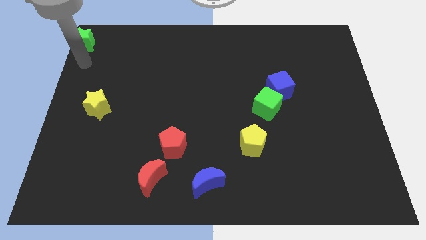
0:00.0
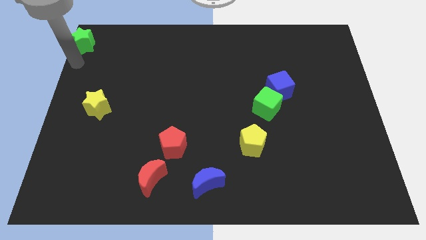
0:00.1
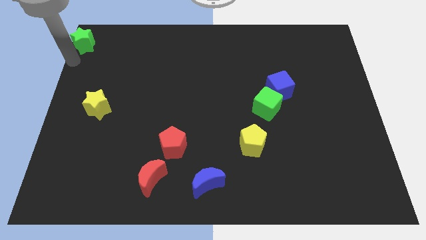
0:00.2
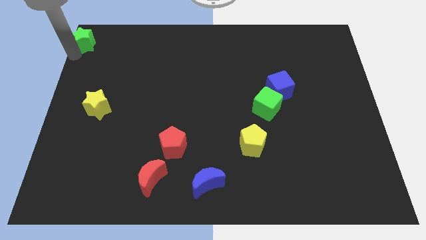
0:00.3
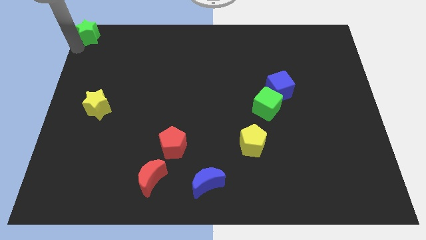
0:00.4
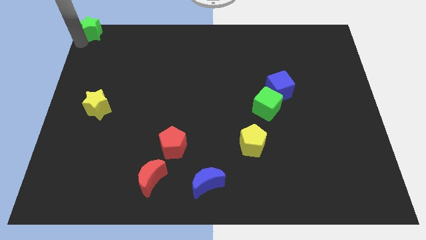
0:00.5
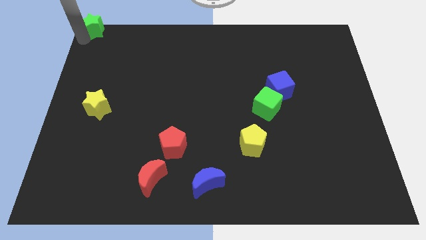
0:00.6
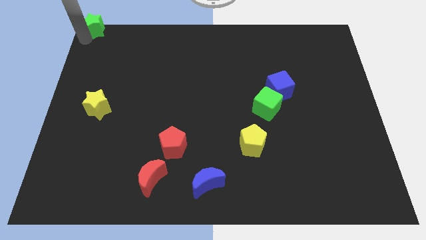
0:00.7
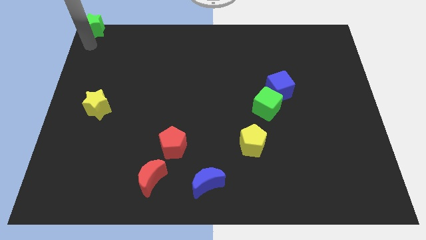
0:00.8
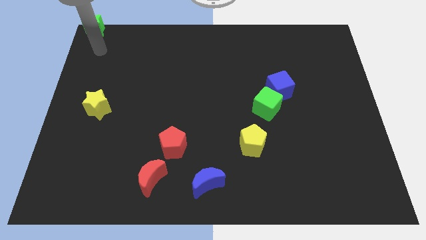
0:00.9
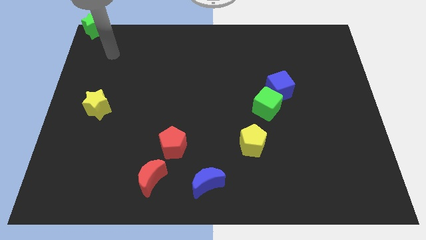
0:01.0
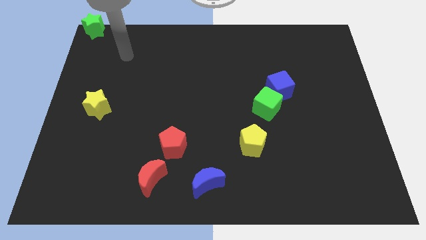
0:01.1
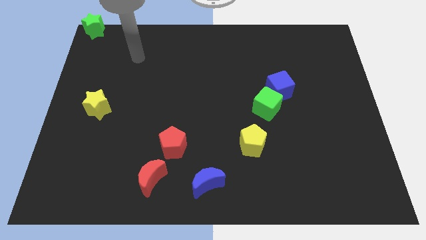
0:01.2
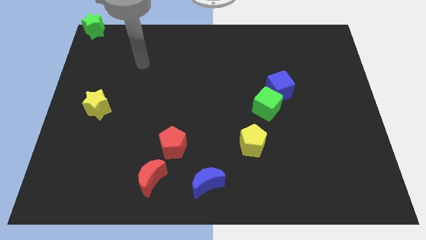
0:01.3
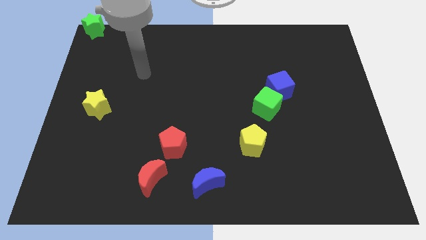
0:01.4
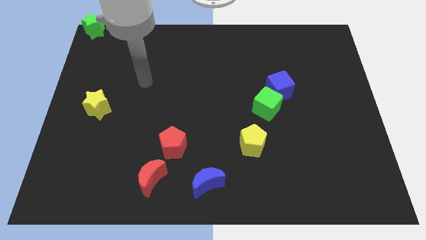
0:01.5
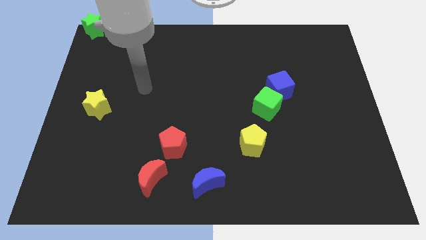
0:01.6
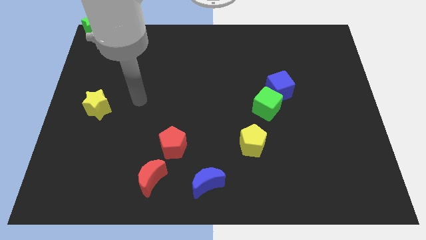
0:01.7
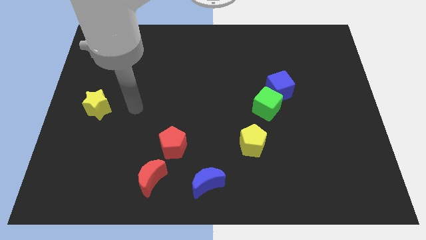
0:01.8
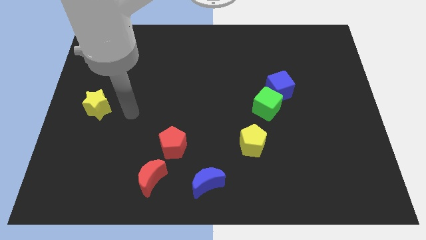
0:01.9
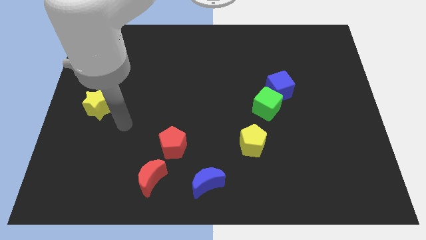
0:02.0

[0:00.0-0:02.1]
push the green star diagonal to yellow star

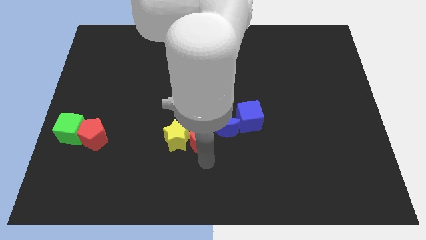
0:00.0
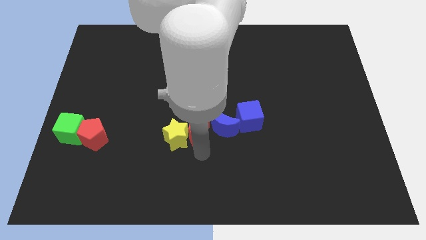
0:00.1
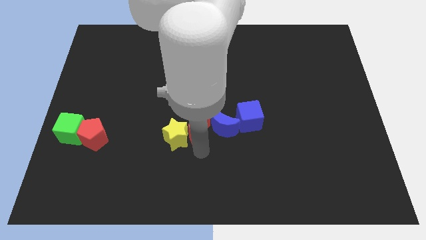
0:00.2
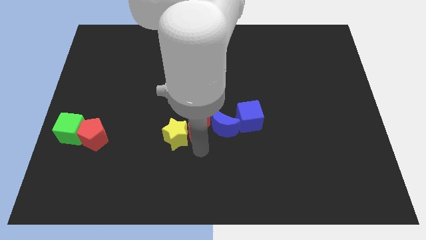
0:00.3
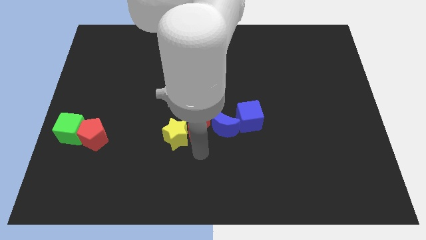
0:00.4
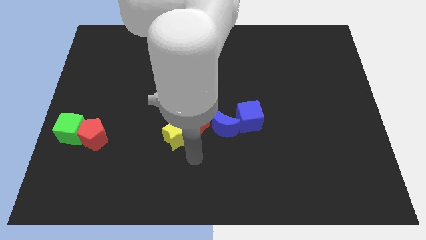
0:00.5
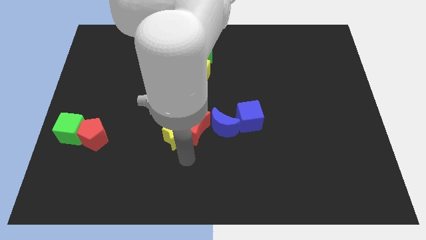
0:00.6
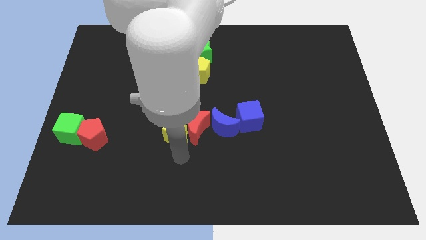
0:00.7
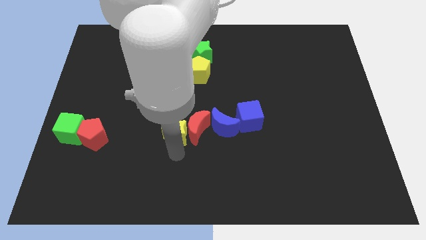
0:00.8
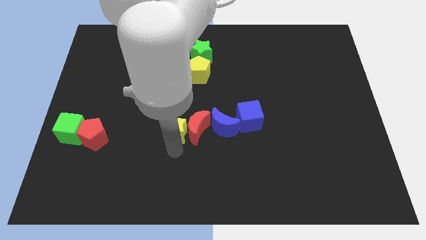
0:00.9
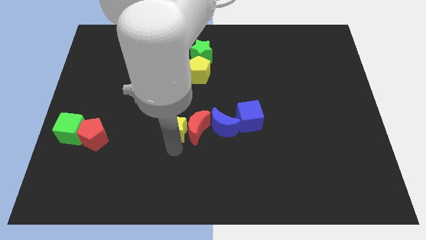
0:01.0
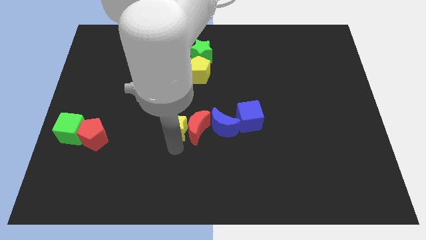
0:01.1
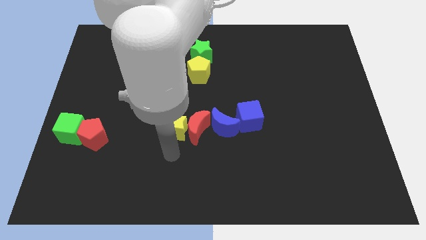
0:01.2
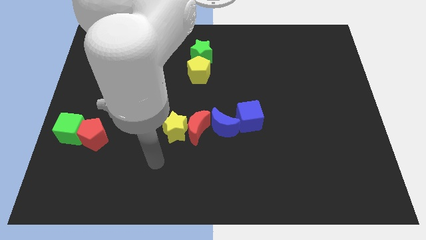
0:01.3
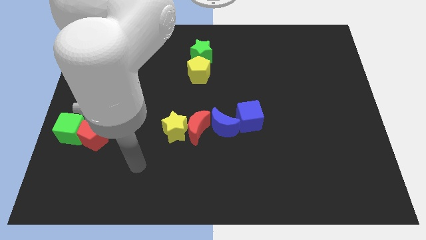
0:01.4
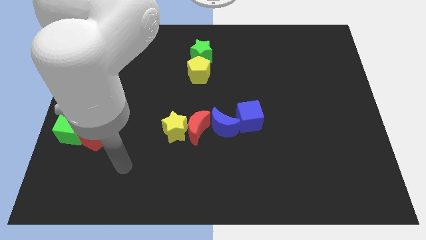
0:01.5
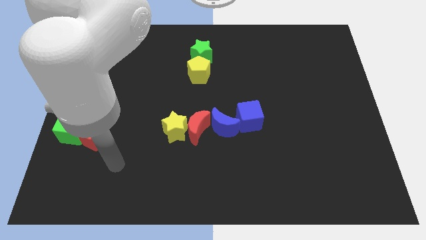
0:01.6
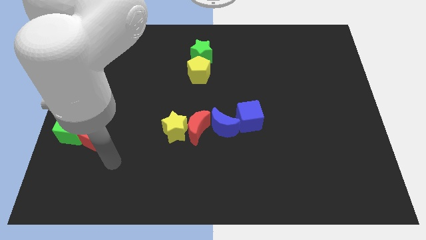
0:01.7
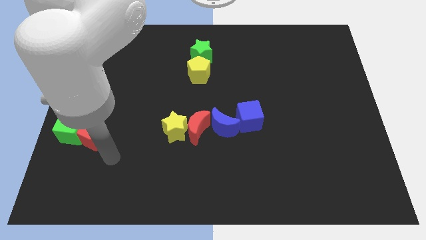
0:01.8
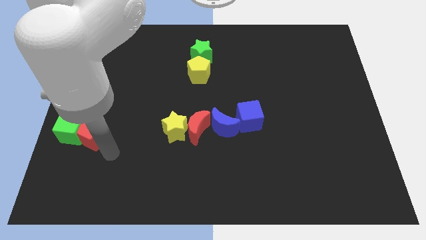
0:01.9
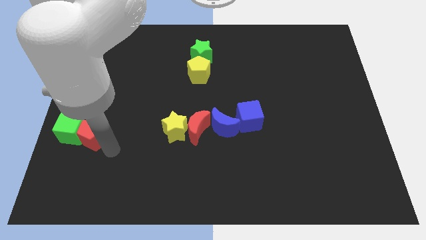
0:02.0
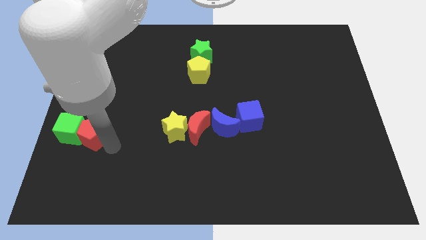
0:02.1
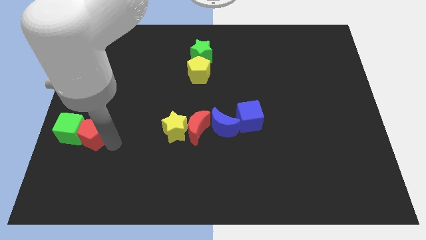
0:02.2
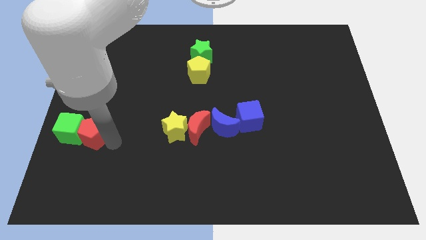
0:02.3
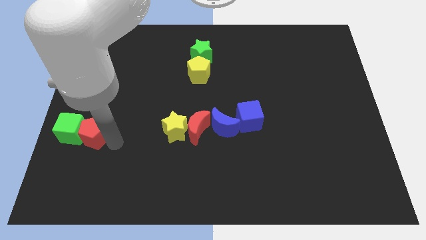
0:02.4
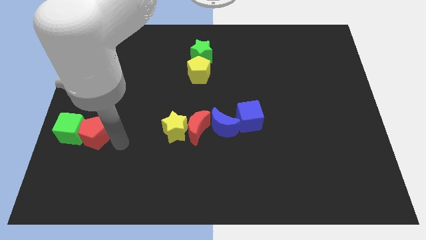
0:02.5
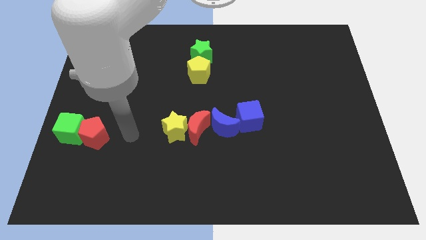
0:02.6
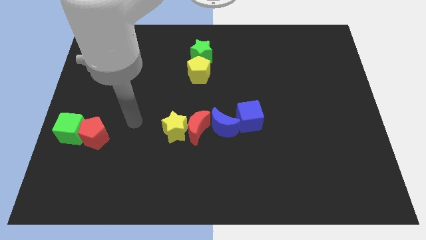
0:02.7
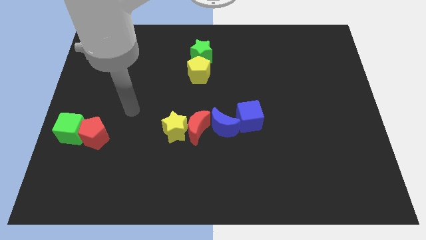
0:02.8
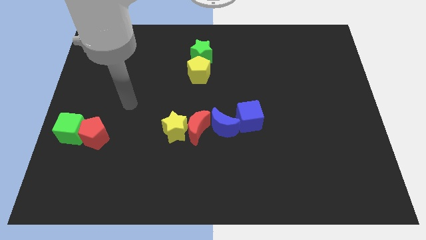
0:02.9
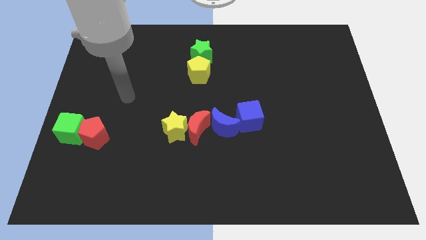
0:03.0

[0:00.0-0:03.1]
move the red crescent along the yellow star to the left of the blue crescent

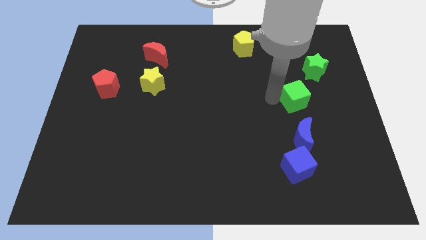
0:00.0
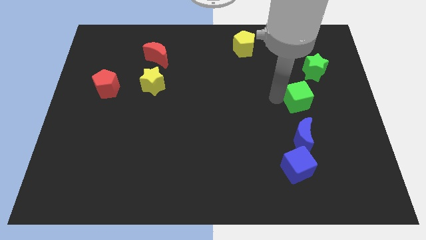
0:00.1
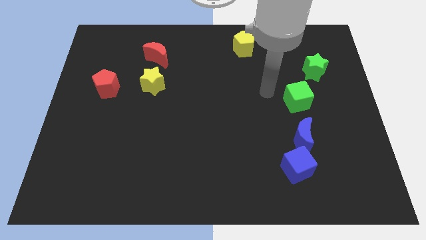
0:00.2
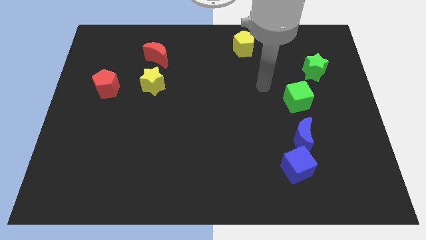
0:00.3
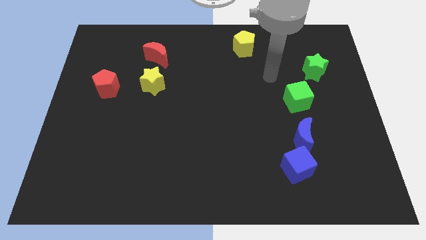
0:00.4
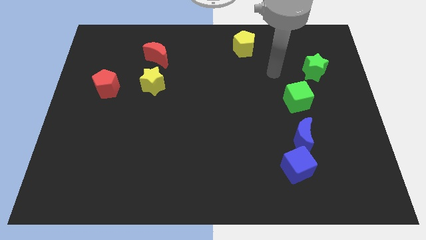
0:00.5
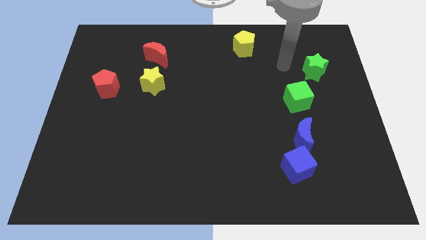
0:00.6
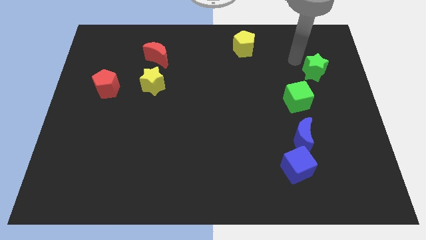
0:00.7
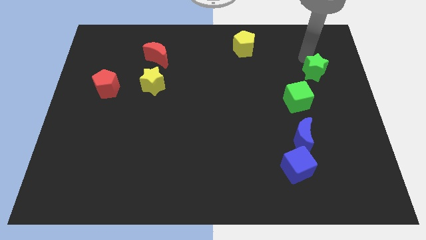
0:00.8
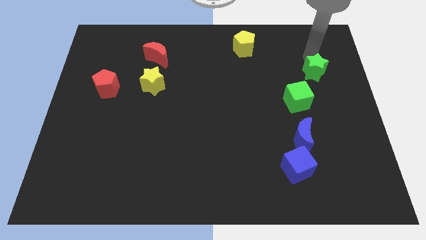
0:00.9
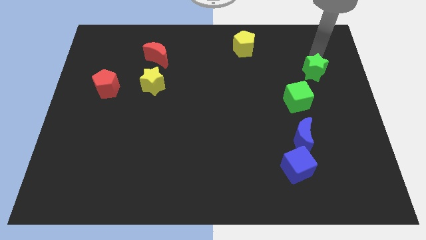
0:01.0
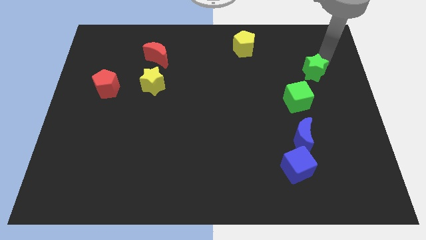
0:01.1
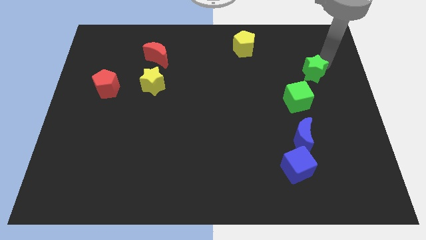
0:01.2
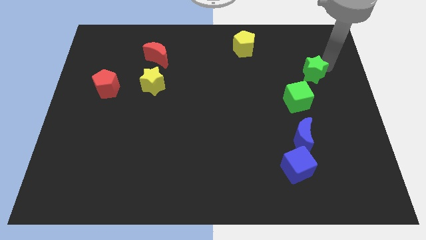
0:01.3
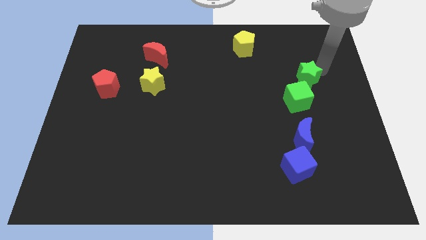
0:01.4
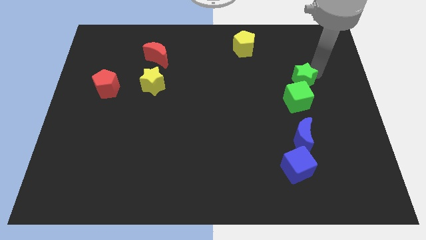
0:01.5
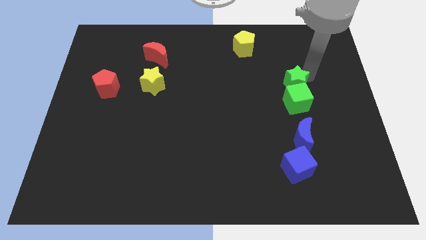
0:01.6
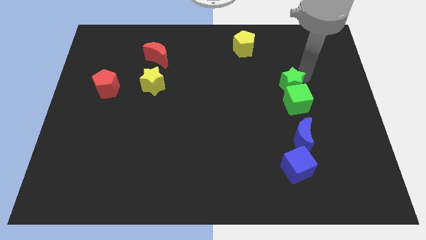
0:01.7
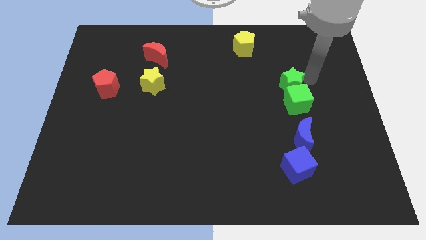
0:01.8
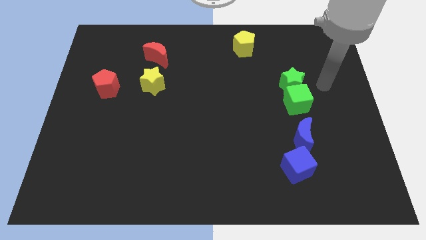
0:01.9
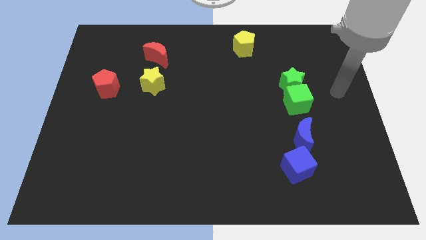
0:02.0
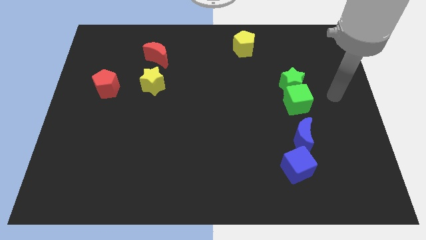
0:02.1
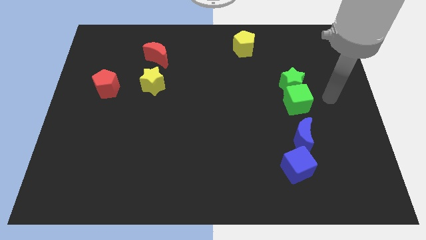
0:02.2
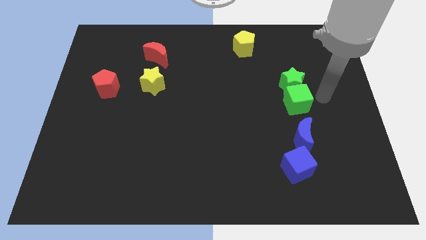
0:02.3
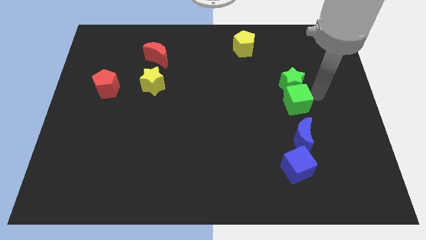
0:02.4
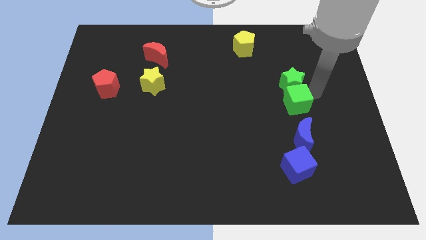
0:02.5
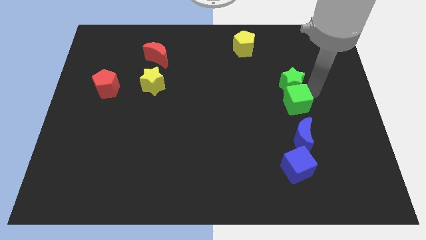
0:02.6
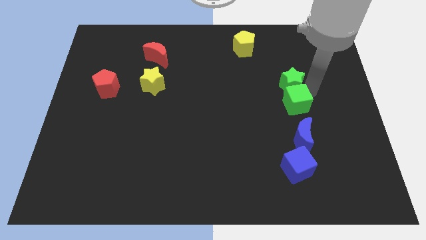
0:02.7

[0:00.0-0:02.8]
move the green star into the green cube

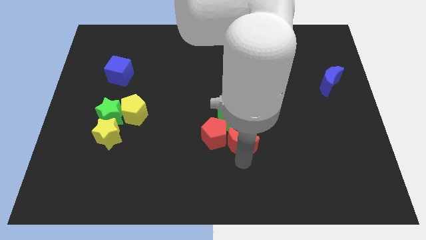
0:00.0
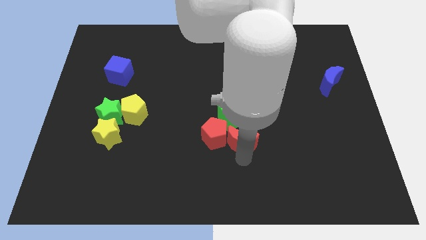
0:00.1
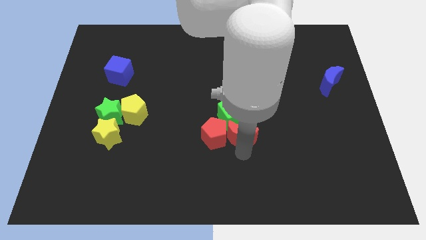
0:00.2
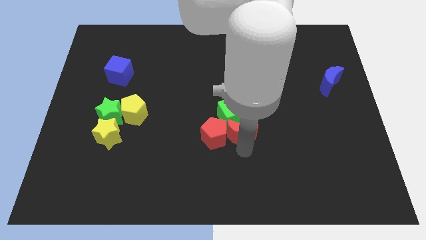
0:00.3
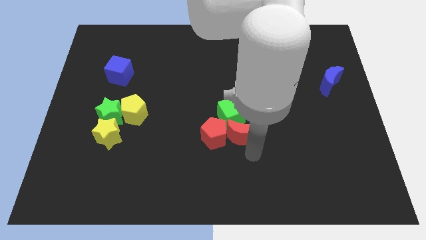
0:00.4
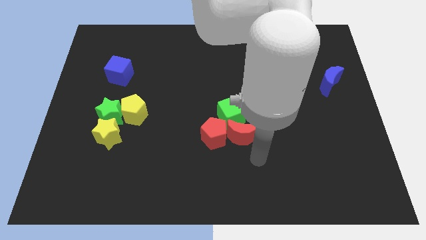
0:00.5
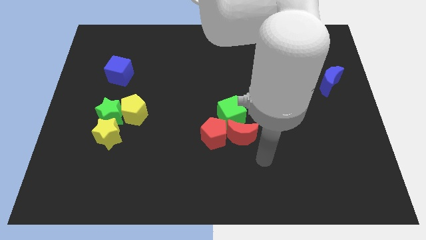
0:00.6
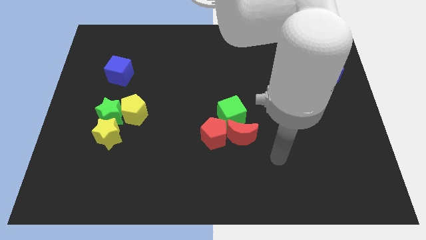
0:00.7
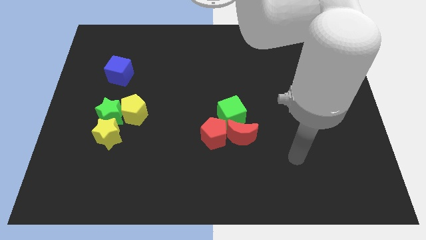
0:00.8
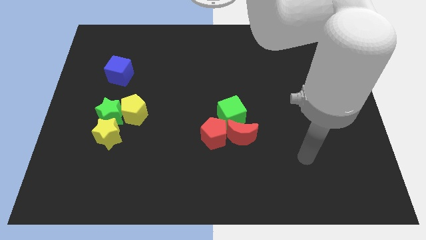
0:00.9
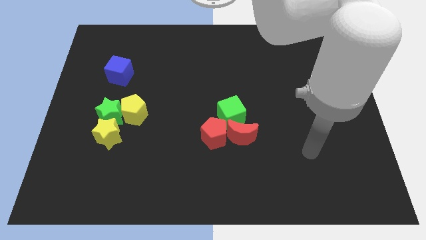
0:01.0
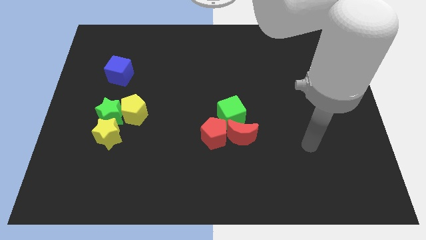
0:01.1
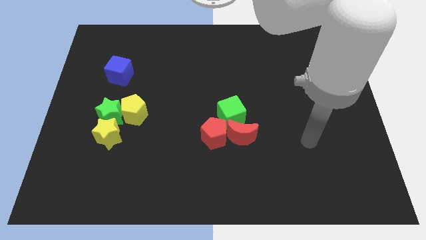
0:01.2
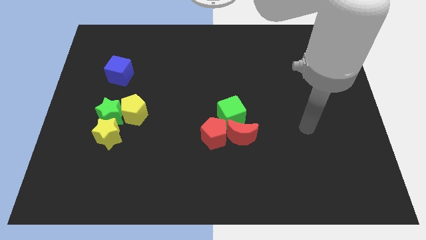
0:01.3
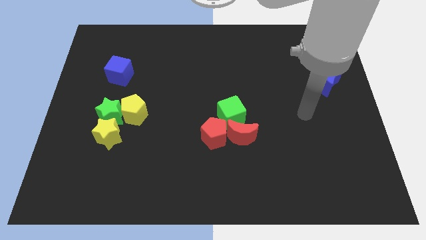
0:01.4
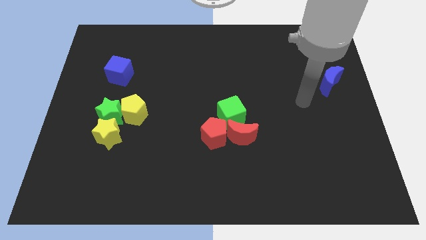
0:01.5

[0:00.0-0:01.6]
push the red moon into the green cube
